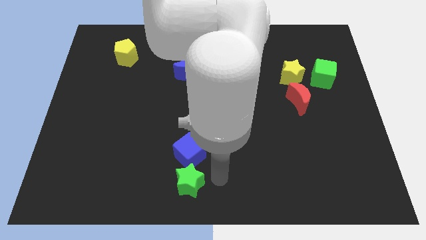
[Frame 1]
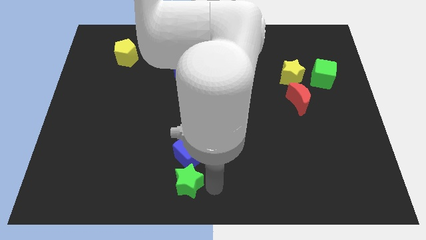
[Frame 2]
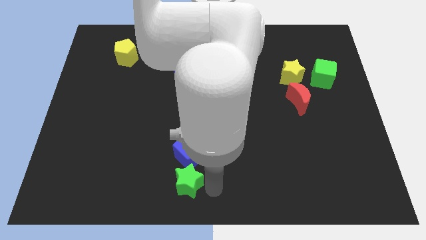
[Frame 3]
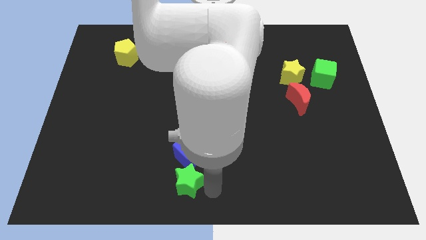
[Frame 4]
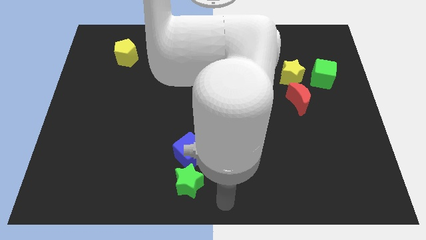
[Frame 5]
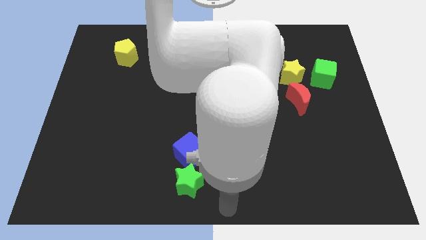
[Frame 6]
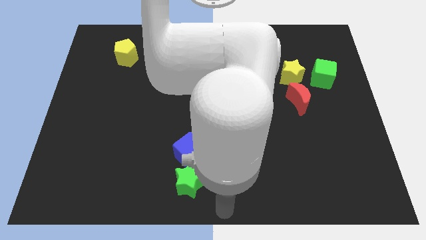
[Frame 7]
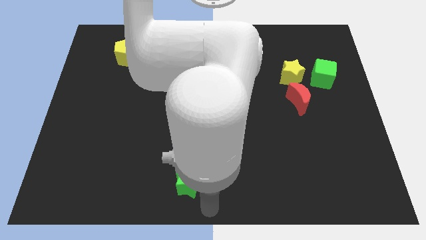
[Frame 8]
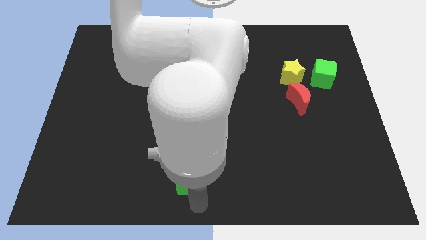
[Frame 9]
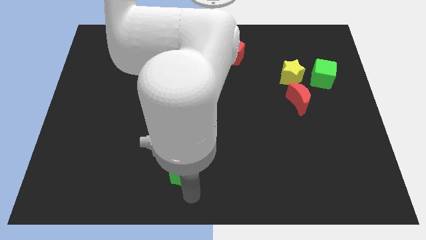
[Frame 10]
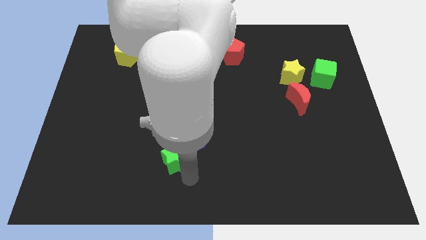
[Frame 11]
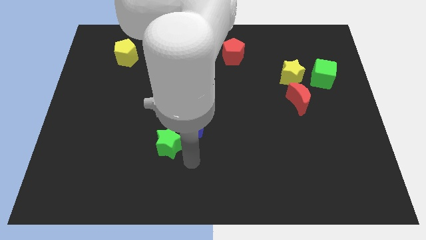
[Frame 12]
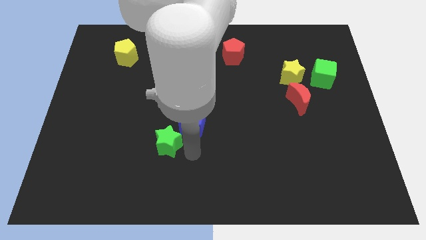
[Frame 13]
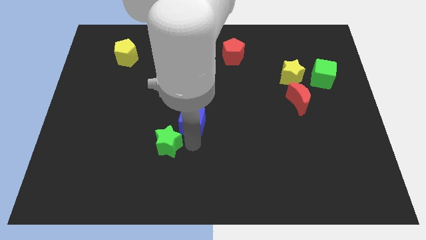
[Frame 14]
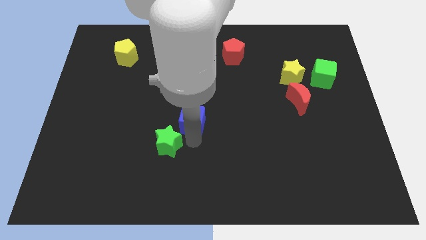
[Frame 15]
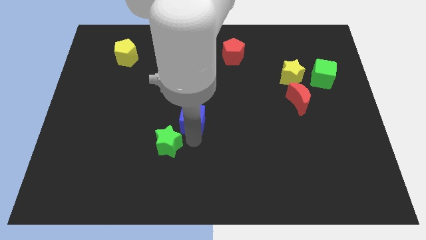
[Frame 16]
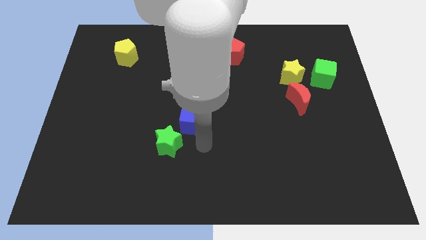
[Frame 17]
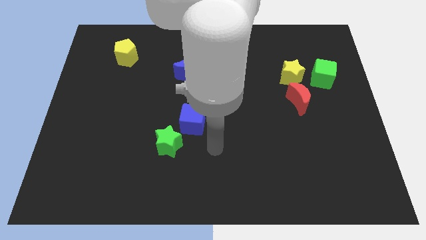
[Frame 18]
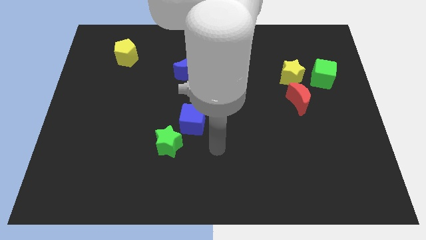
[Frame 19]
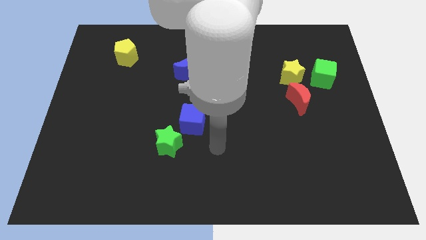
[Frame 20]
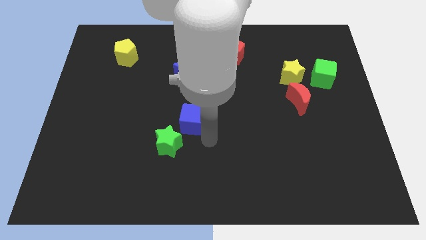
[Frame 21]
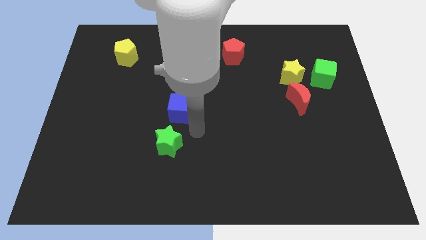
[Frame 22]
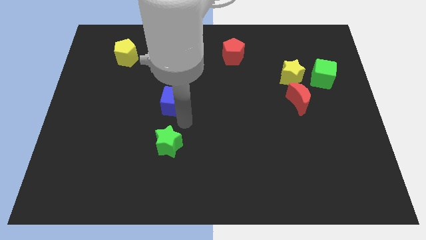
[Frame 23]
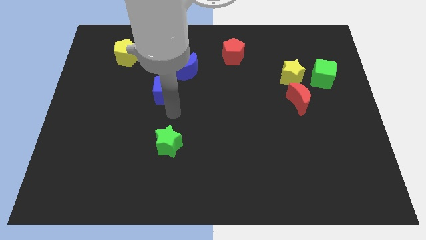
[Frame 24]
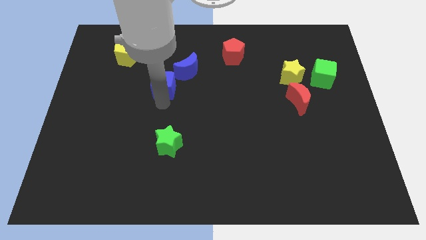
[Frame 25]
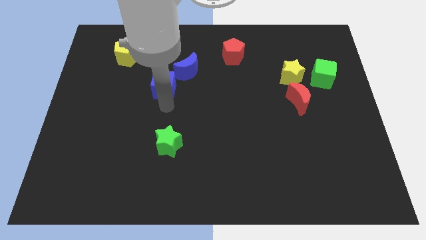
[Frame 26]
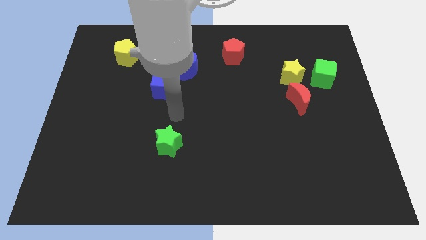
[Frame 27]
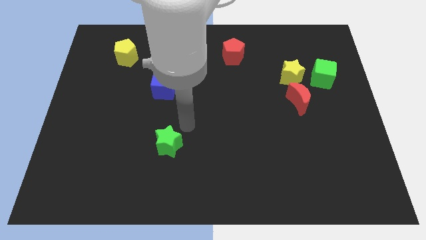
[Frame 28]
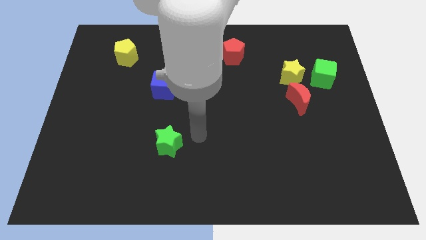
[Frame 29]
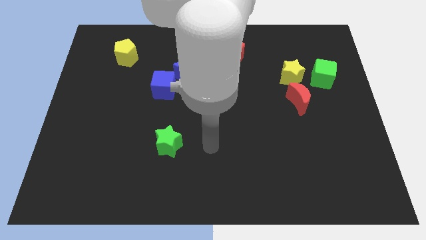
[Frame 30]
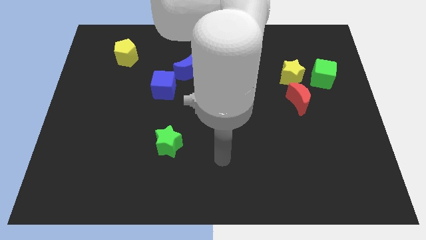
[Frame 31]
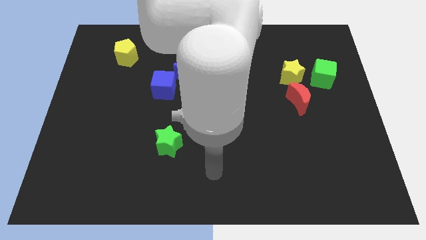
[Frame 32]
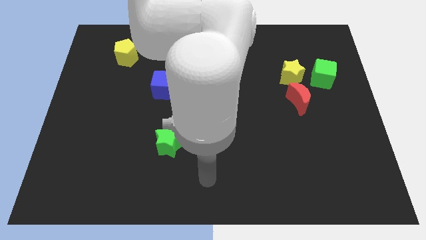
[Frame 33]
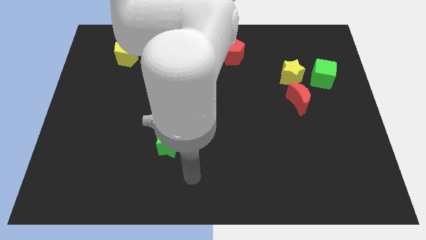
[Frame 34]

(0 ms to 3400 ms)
place the blue cube to the bottom left of blue moon

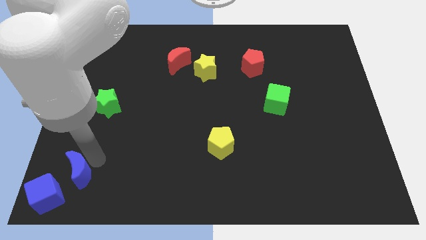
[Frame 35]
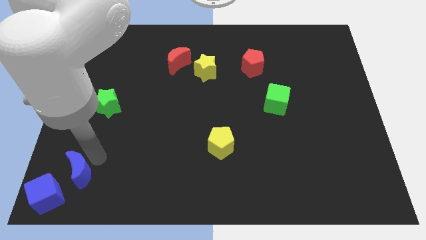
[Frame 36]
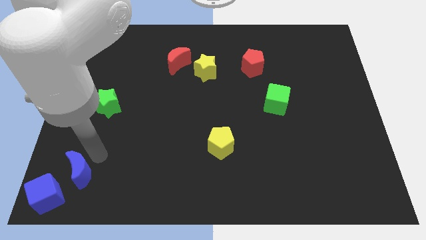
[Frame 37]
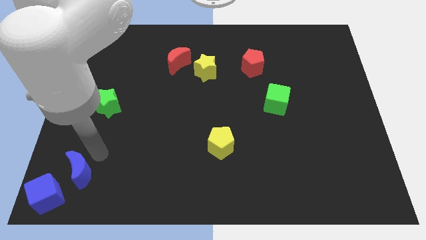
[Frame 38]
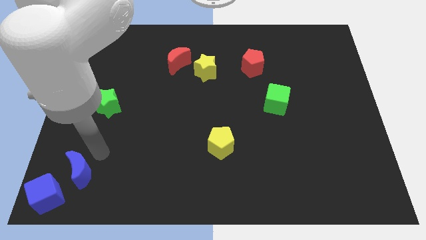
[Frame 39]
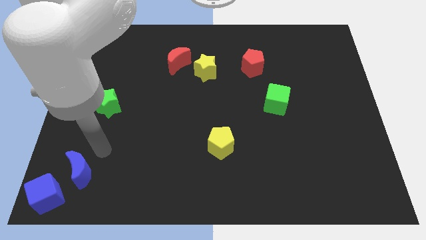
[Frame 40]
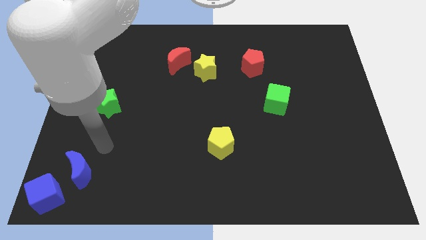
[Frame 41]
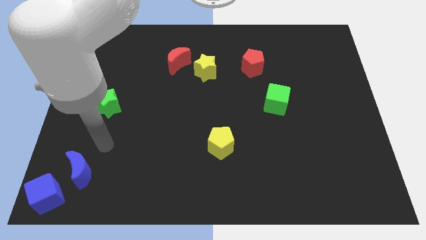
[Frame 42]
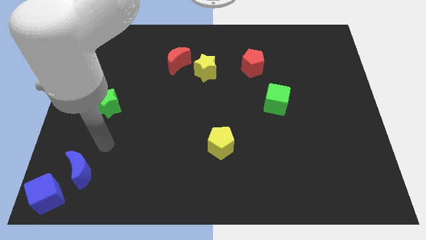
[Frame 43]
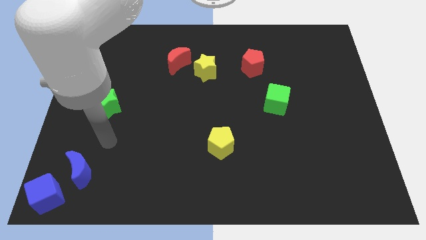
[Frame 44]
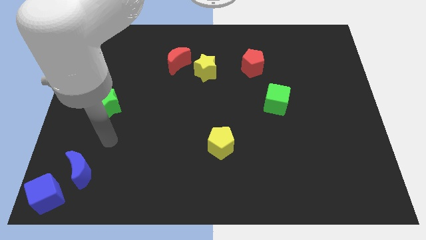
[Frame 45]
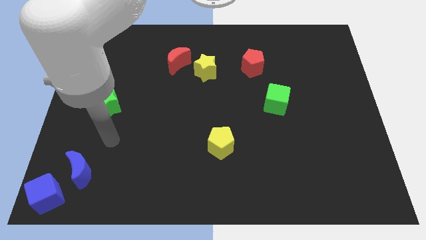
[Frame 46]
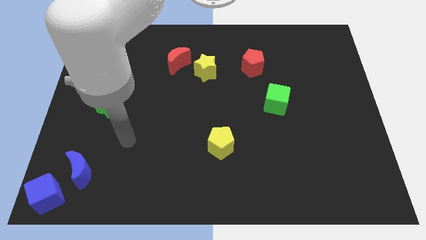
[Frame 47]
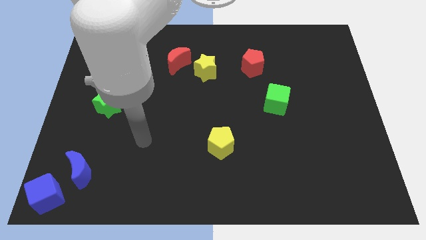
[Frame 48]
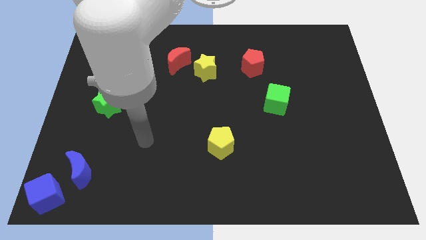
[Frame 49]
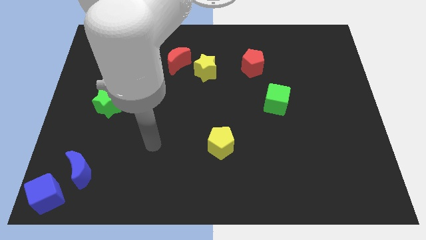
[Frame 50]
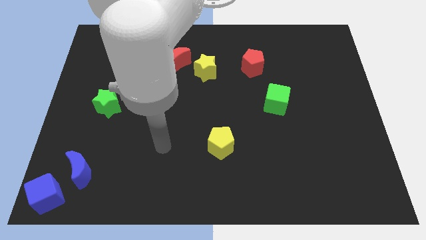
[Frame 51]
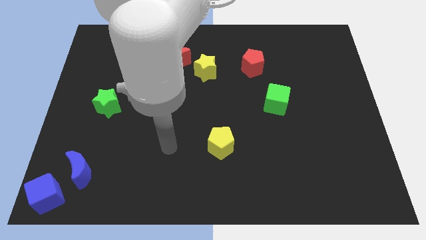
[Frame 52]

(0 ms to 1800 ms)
move the arm away from the blue moon

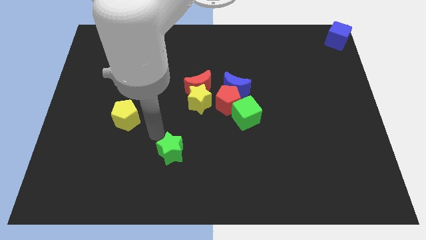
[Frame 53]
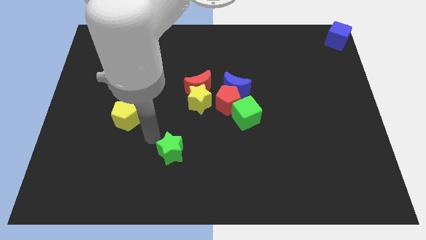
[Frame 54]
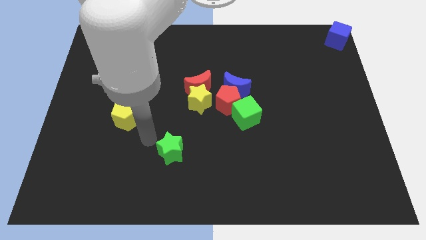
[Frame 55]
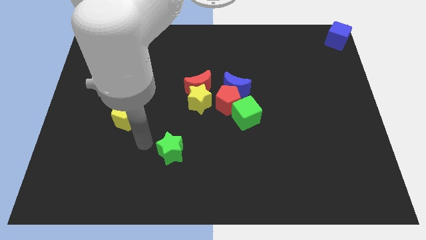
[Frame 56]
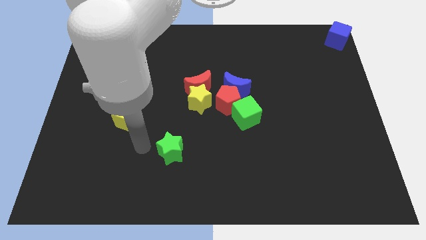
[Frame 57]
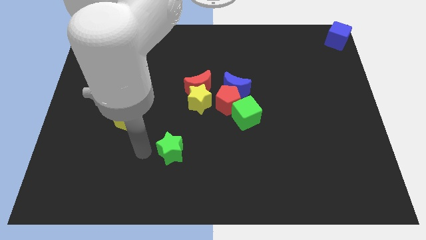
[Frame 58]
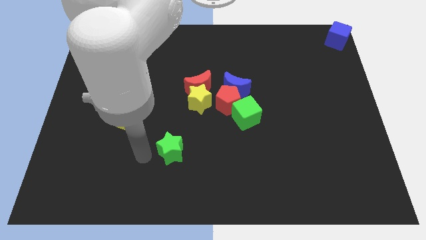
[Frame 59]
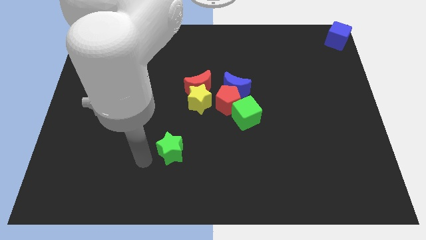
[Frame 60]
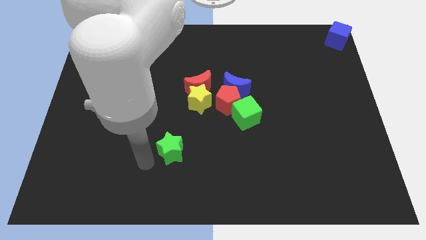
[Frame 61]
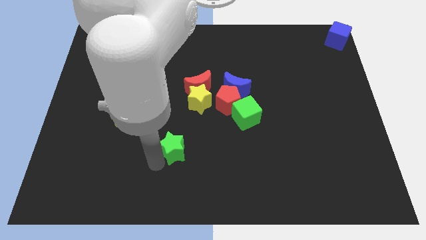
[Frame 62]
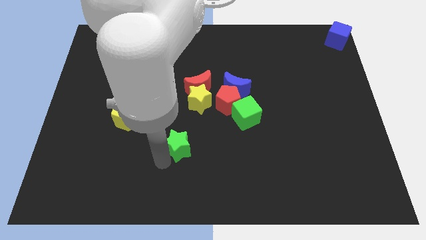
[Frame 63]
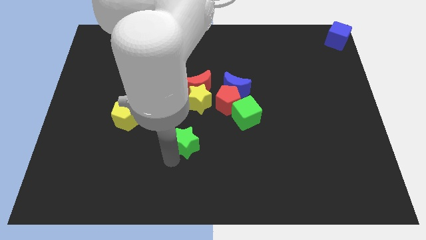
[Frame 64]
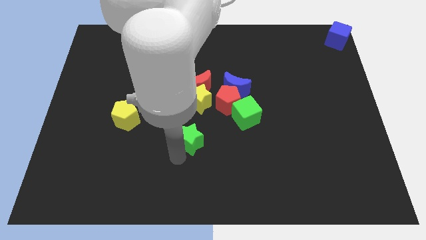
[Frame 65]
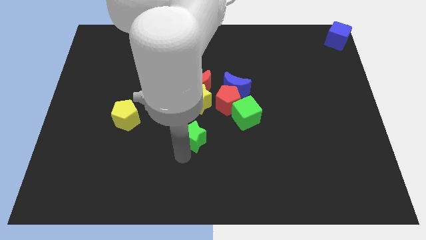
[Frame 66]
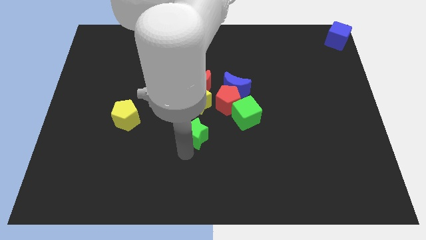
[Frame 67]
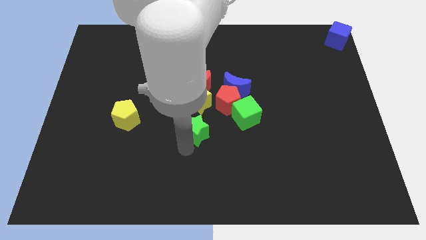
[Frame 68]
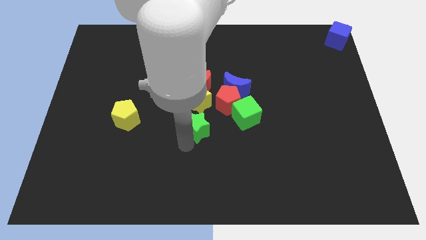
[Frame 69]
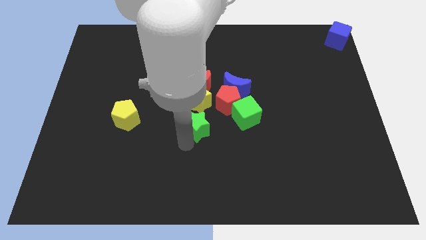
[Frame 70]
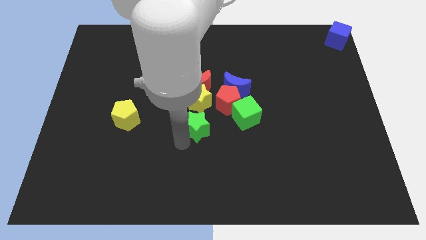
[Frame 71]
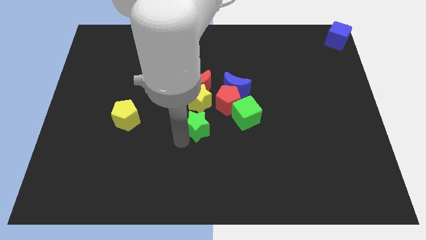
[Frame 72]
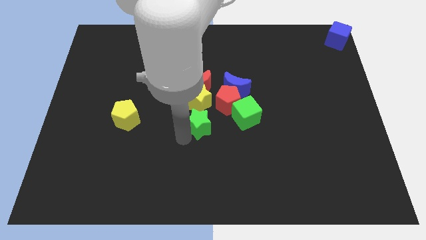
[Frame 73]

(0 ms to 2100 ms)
move the green star to the bottom of the yellow star

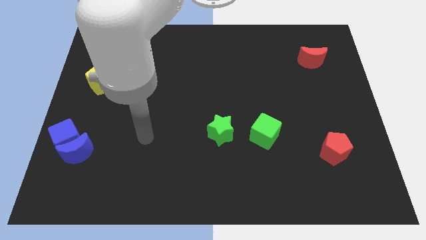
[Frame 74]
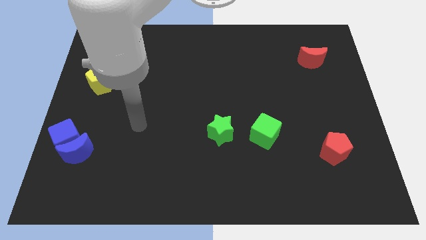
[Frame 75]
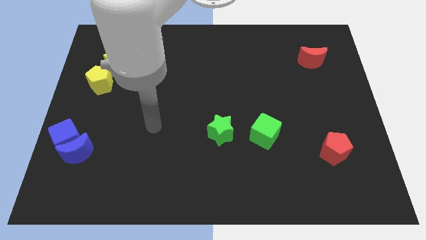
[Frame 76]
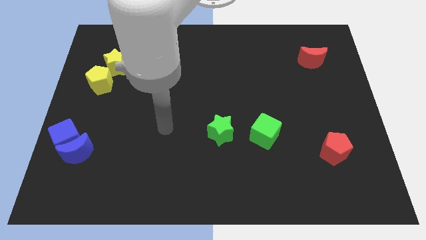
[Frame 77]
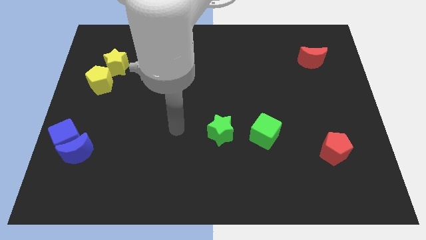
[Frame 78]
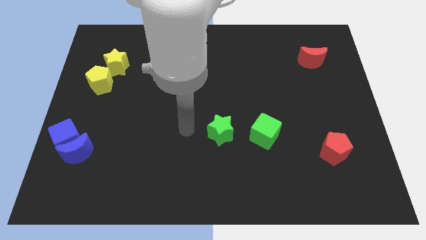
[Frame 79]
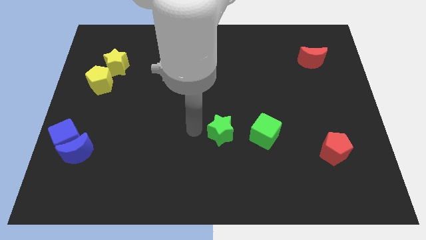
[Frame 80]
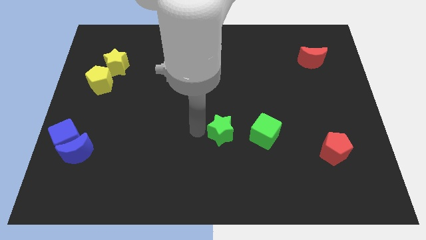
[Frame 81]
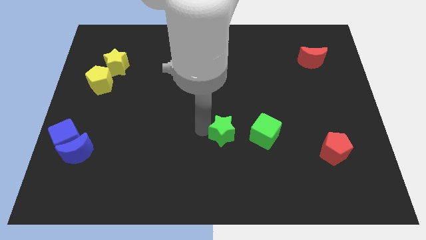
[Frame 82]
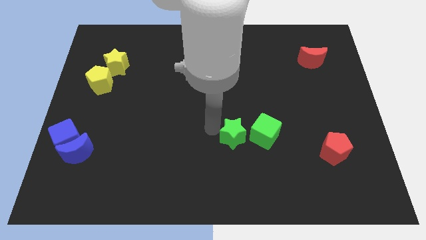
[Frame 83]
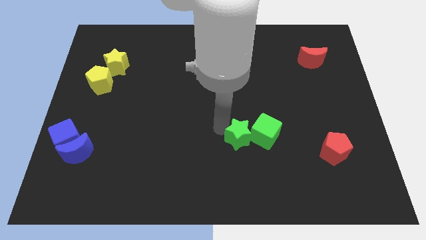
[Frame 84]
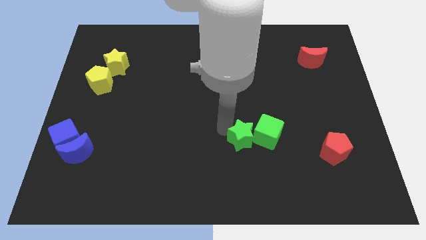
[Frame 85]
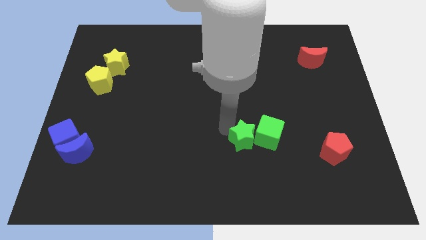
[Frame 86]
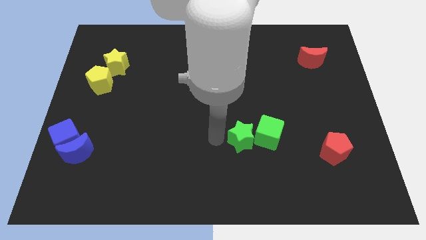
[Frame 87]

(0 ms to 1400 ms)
push the green star into the green cube

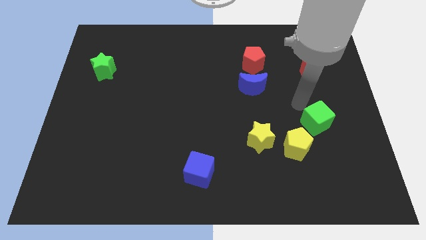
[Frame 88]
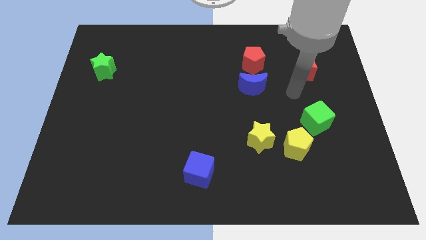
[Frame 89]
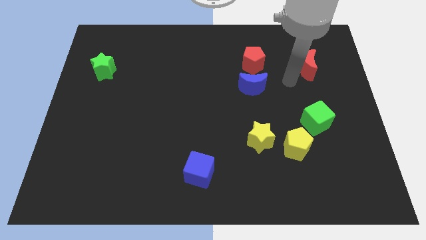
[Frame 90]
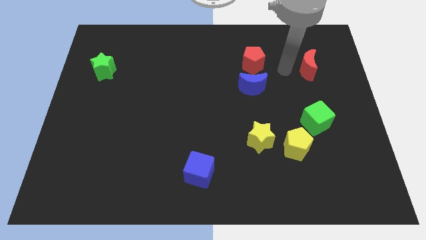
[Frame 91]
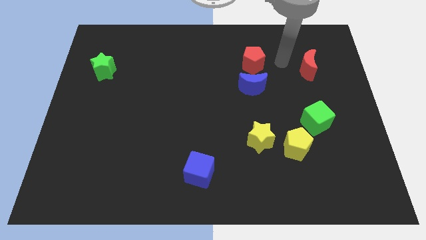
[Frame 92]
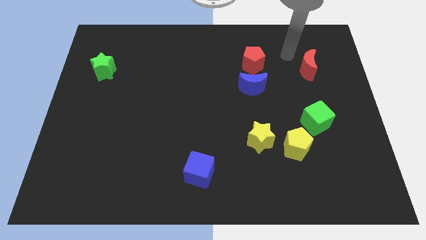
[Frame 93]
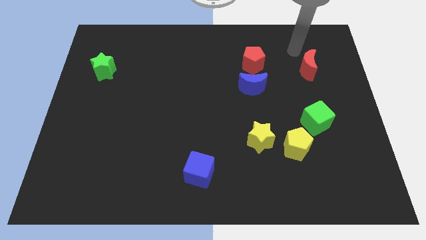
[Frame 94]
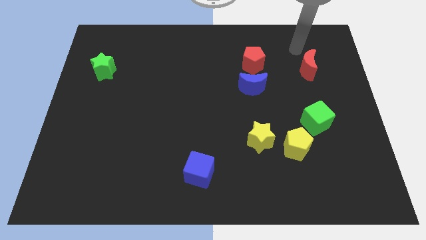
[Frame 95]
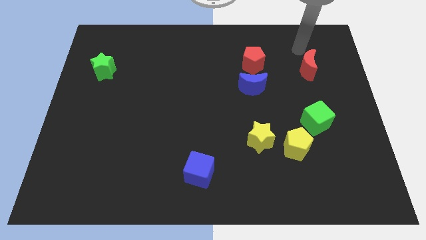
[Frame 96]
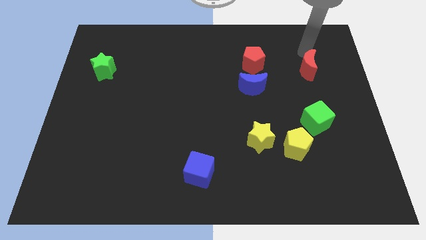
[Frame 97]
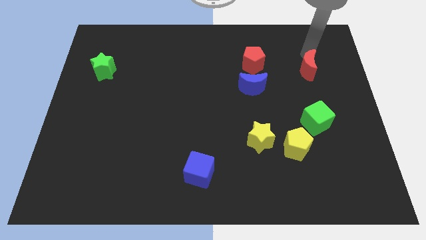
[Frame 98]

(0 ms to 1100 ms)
point your arm towards red moon
